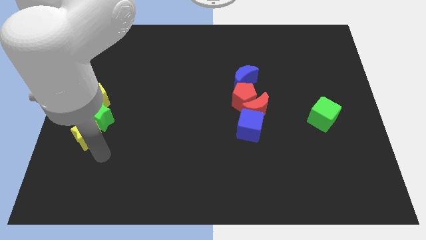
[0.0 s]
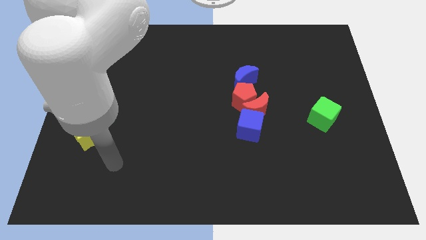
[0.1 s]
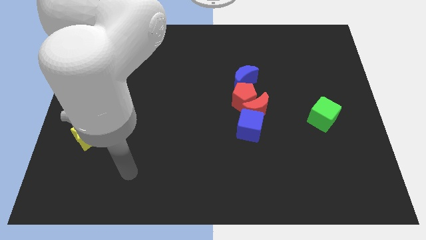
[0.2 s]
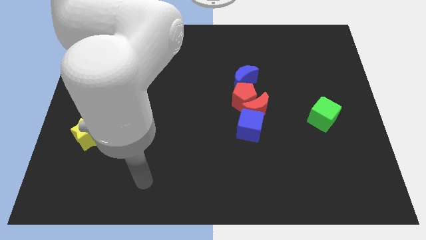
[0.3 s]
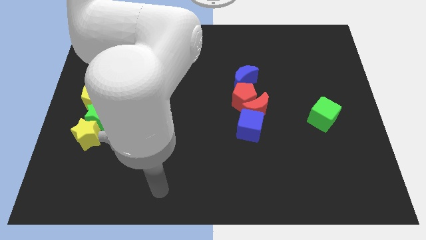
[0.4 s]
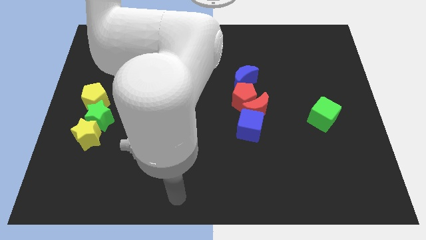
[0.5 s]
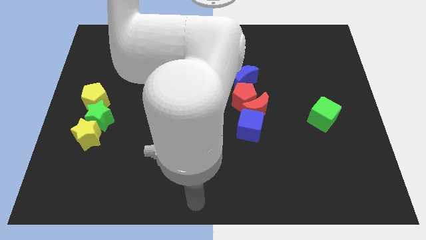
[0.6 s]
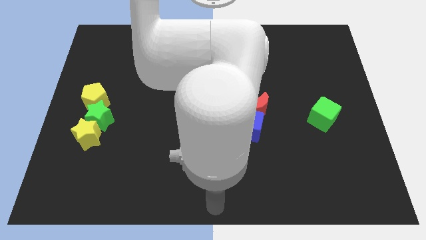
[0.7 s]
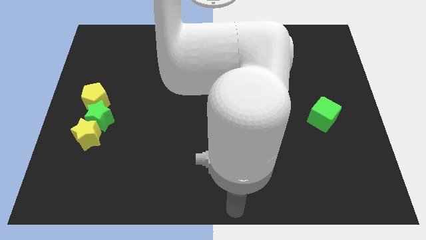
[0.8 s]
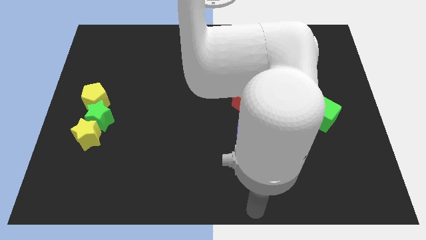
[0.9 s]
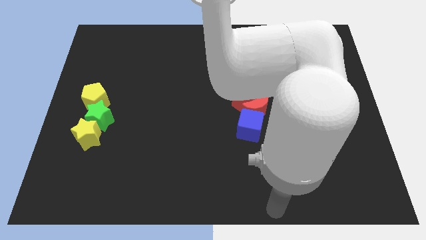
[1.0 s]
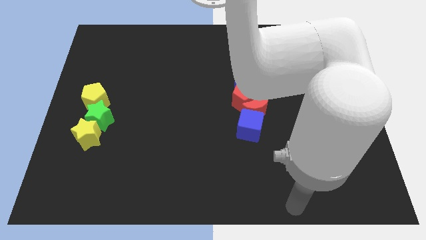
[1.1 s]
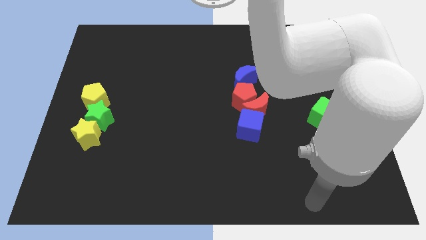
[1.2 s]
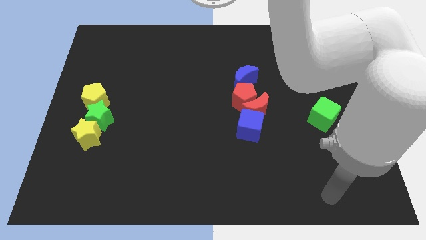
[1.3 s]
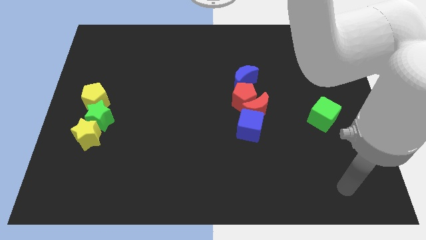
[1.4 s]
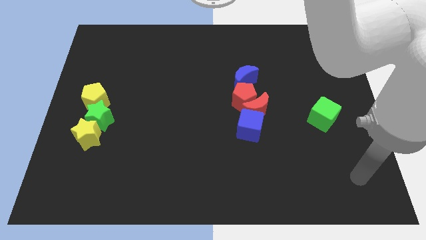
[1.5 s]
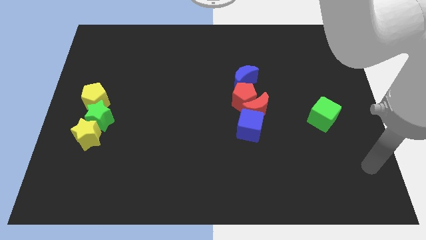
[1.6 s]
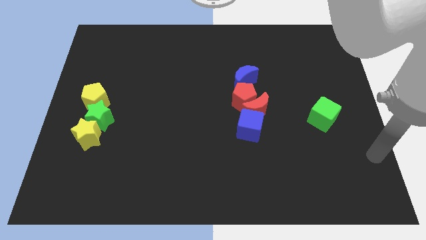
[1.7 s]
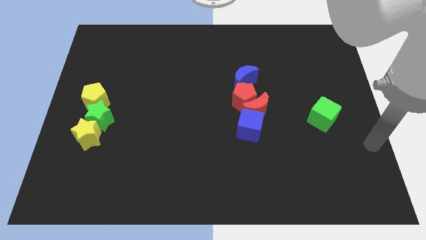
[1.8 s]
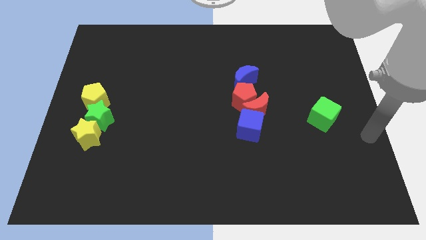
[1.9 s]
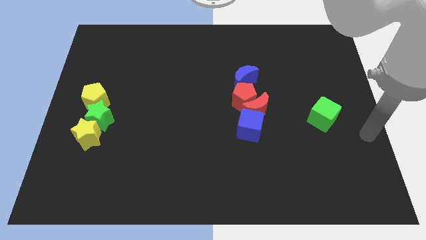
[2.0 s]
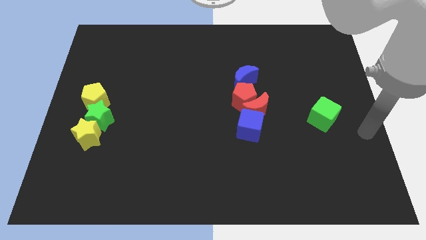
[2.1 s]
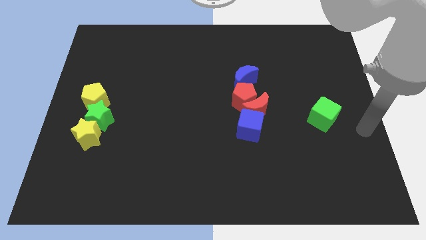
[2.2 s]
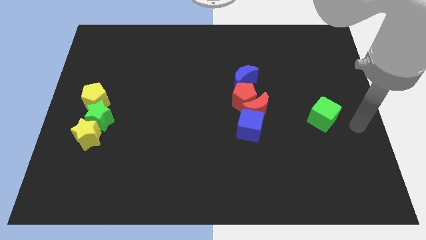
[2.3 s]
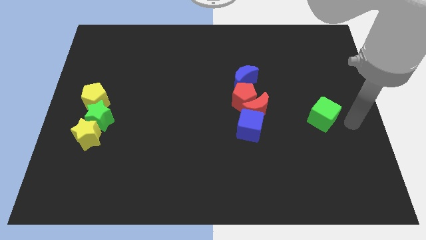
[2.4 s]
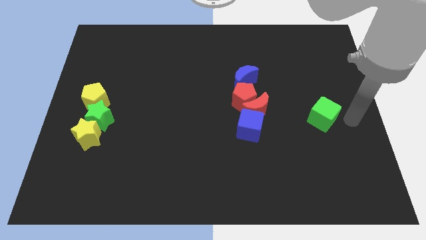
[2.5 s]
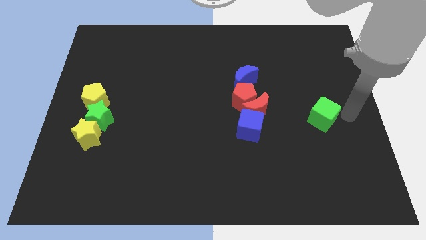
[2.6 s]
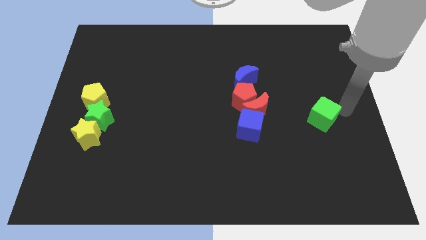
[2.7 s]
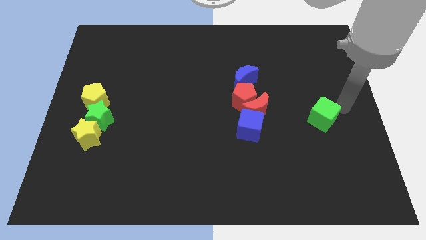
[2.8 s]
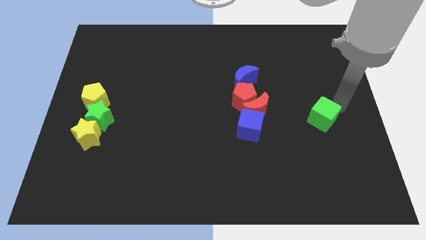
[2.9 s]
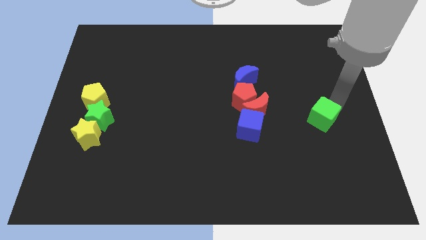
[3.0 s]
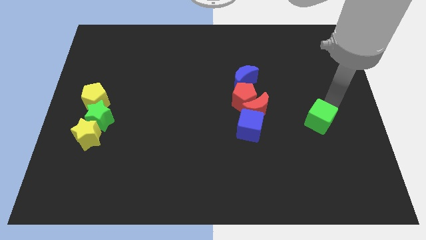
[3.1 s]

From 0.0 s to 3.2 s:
touch the top side of green cube with your arm

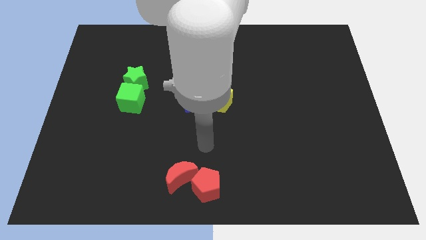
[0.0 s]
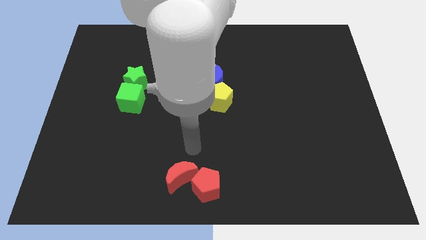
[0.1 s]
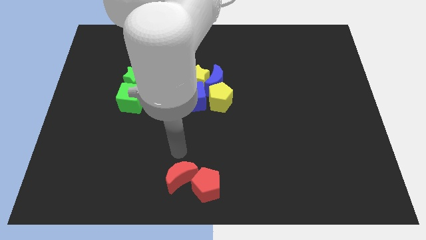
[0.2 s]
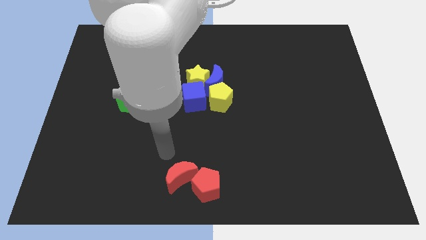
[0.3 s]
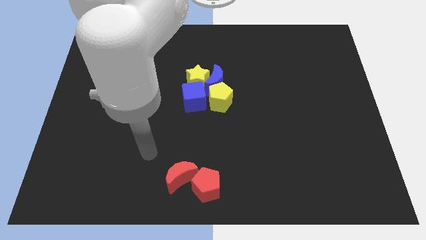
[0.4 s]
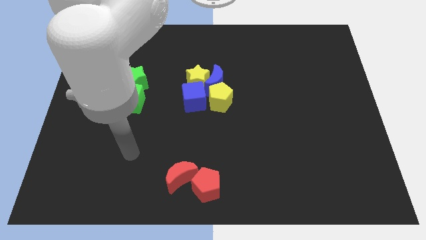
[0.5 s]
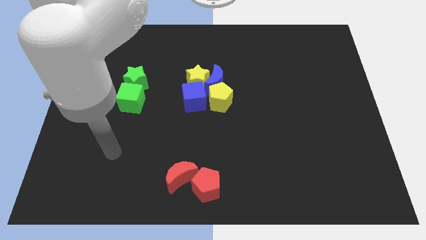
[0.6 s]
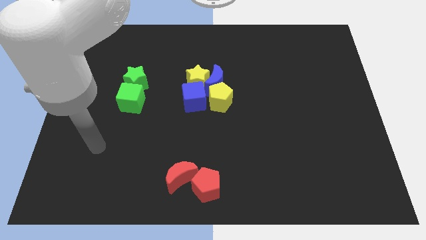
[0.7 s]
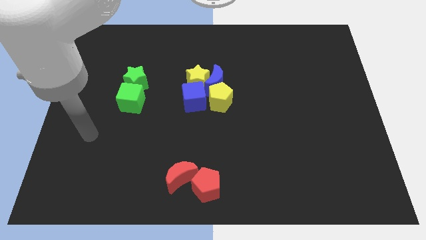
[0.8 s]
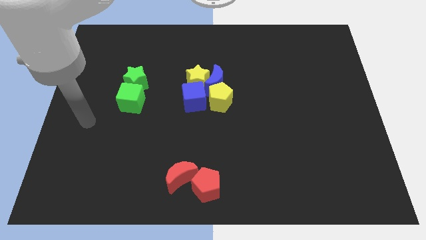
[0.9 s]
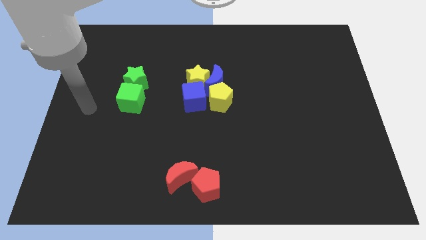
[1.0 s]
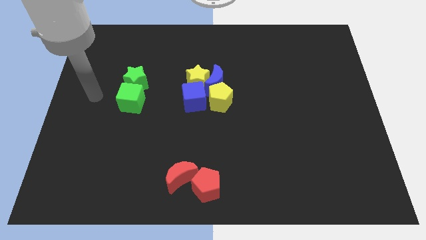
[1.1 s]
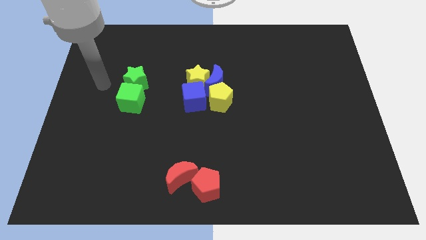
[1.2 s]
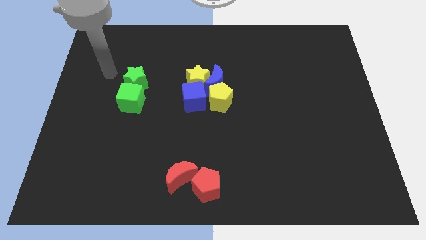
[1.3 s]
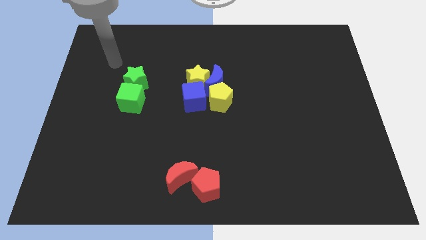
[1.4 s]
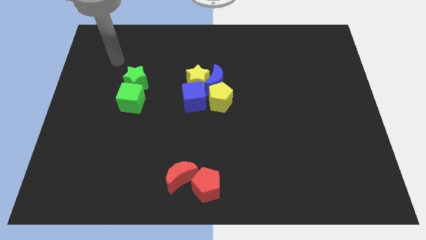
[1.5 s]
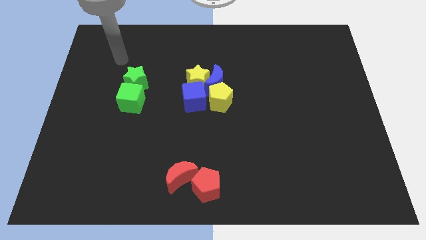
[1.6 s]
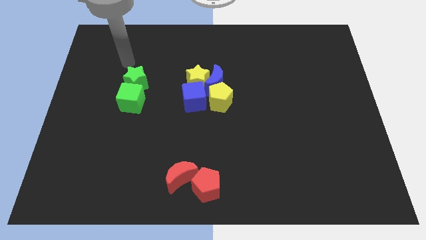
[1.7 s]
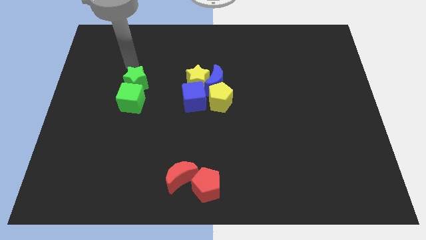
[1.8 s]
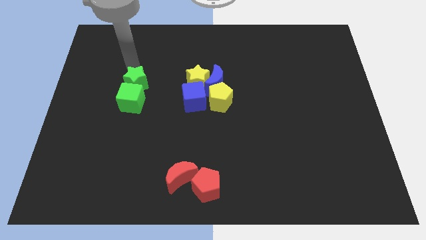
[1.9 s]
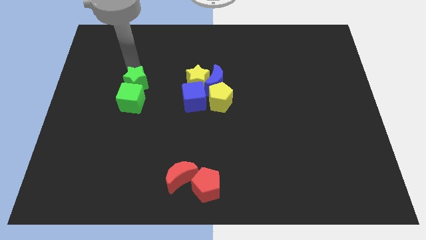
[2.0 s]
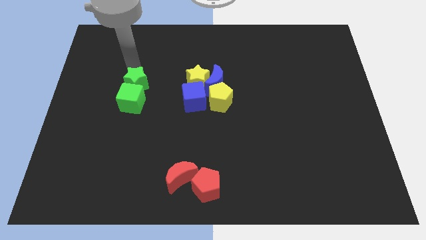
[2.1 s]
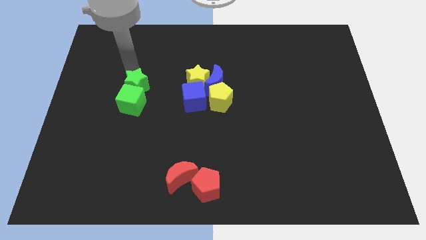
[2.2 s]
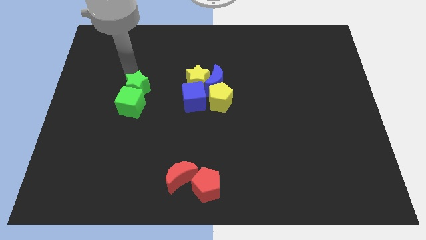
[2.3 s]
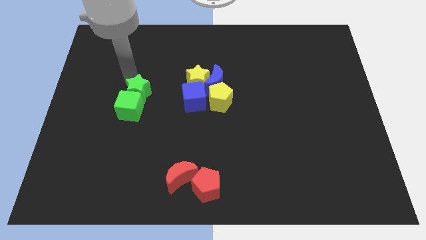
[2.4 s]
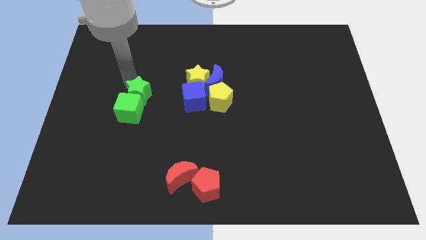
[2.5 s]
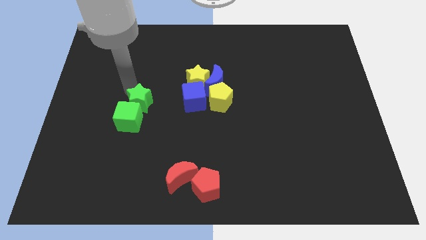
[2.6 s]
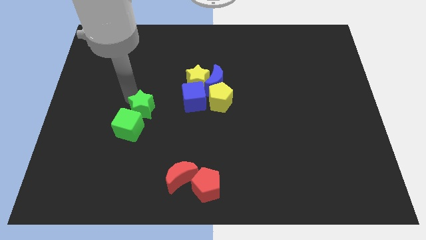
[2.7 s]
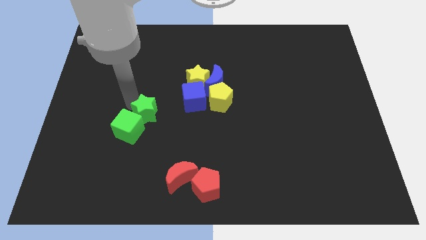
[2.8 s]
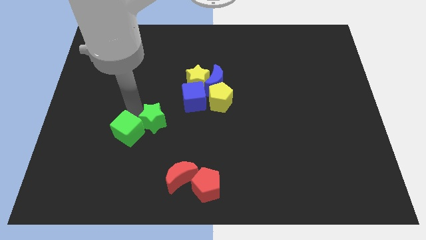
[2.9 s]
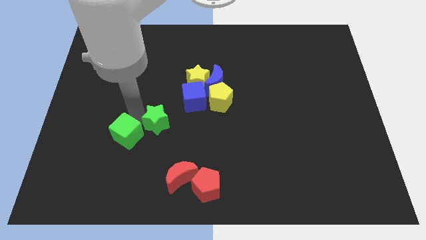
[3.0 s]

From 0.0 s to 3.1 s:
separate the green cube from the green star

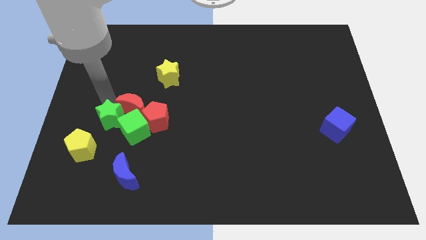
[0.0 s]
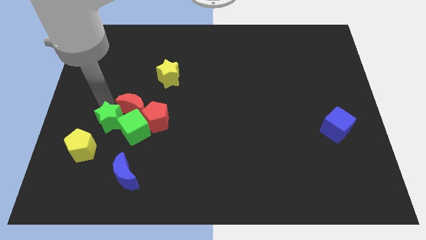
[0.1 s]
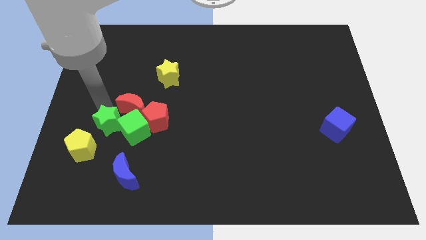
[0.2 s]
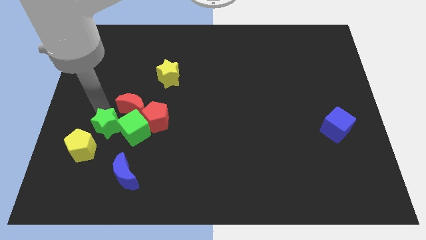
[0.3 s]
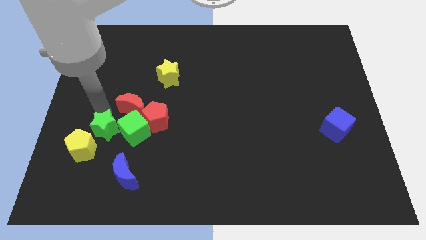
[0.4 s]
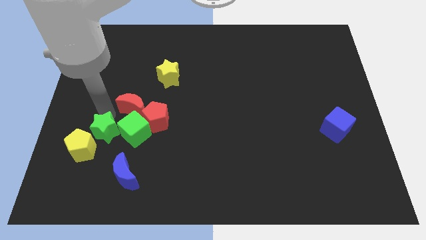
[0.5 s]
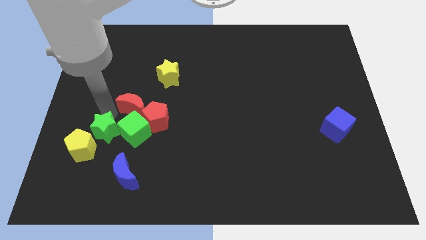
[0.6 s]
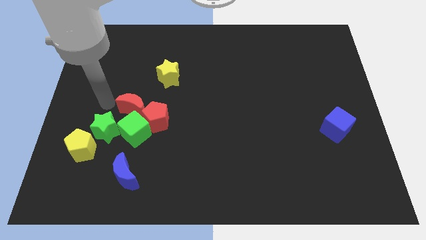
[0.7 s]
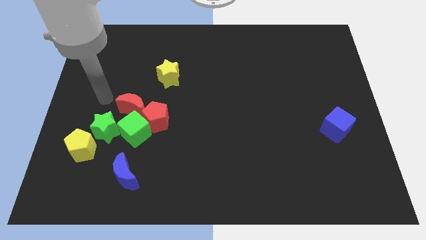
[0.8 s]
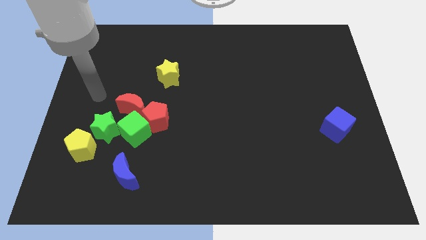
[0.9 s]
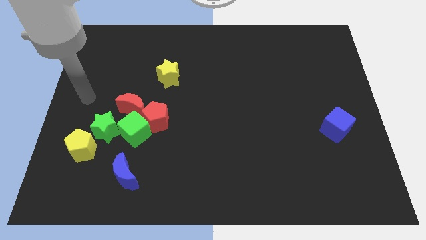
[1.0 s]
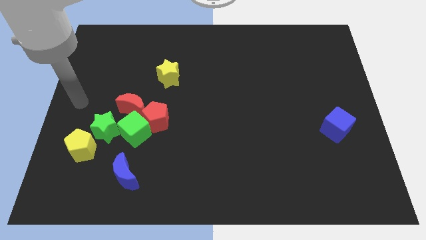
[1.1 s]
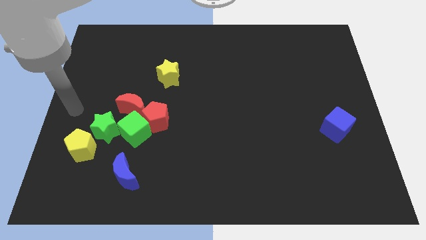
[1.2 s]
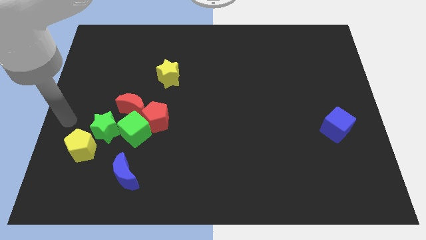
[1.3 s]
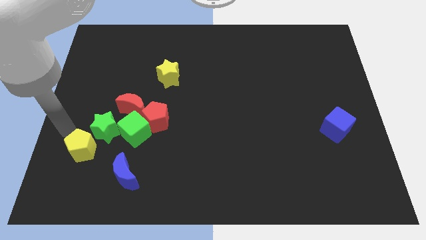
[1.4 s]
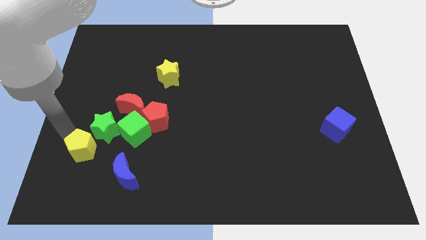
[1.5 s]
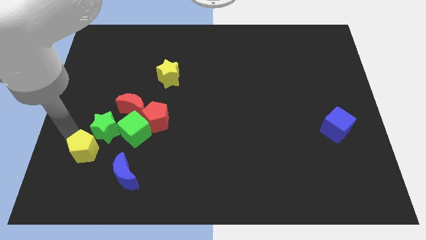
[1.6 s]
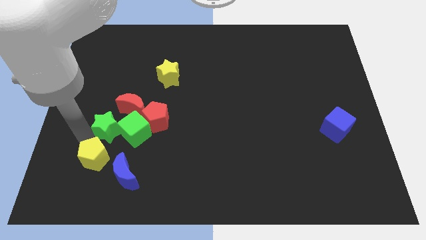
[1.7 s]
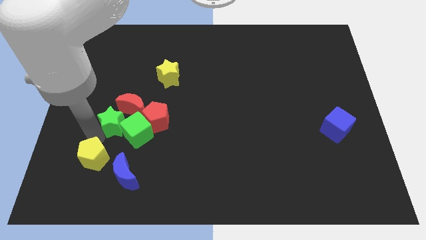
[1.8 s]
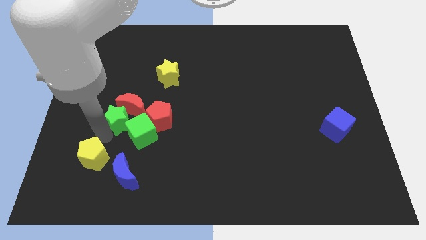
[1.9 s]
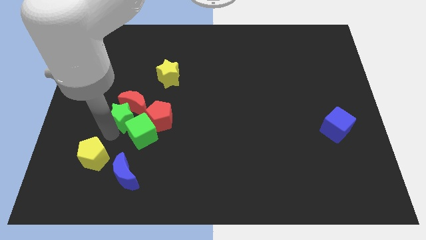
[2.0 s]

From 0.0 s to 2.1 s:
place the arm at the bottom side of the green star

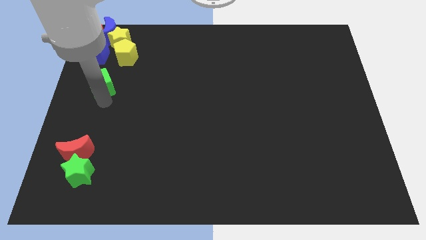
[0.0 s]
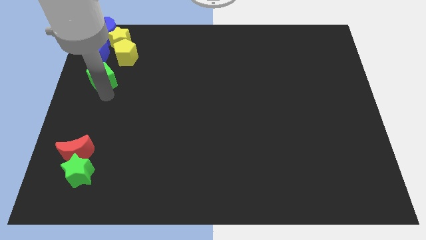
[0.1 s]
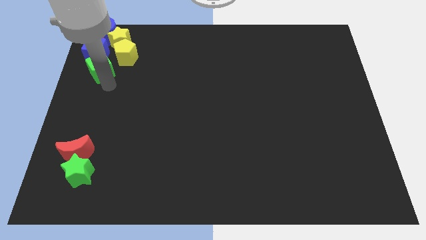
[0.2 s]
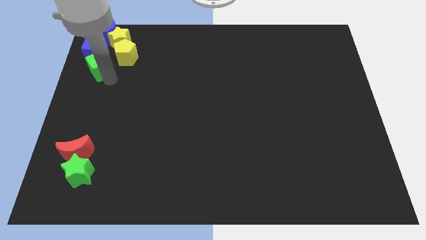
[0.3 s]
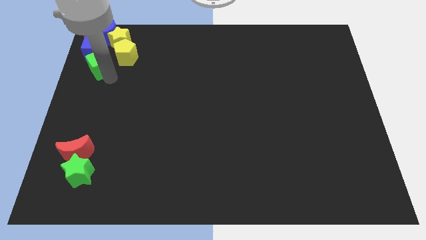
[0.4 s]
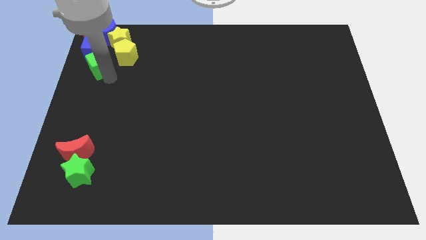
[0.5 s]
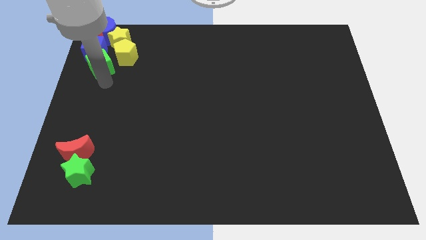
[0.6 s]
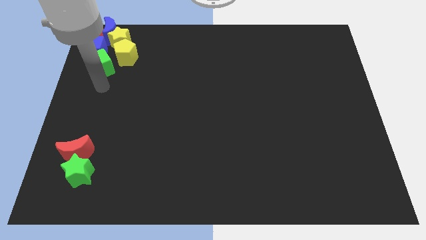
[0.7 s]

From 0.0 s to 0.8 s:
push the green cube to the bottom of the blue cube
